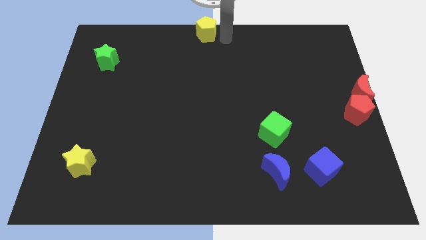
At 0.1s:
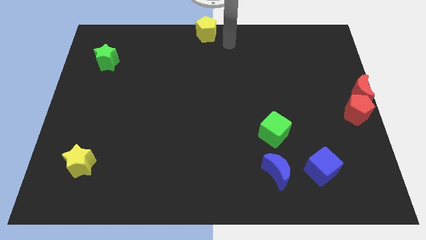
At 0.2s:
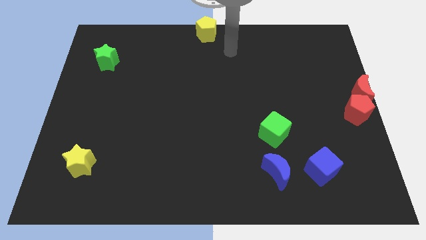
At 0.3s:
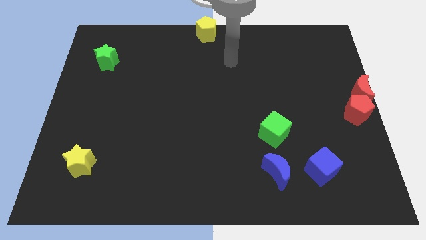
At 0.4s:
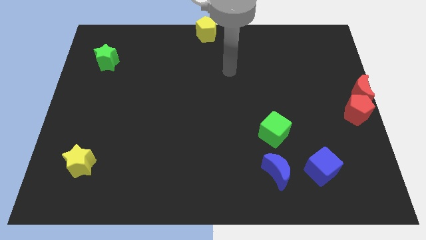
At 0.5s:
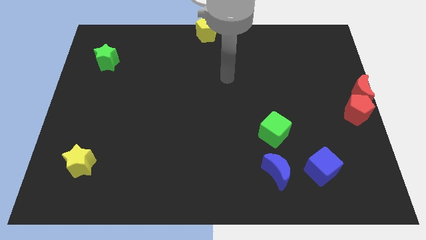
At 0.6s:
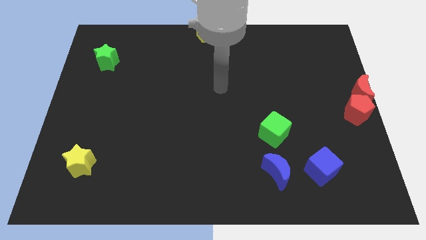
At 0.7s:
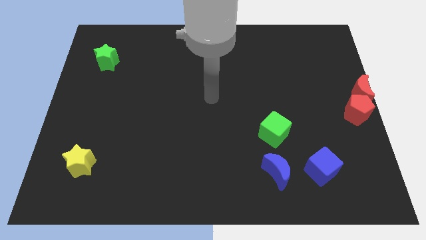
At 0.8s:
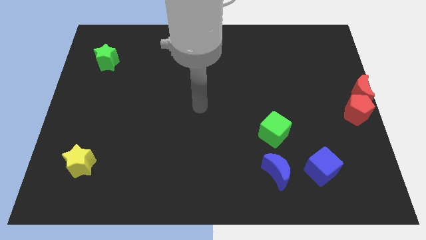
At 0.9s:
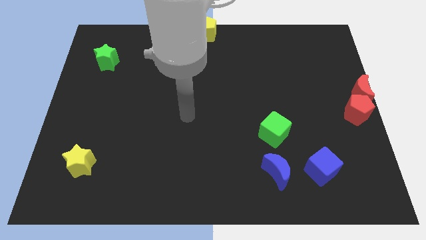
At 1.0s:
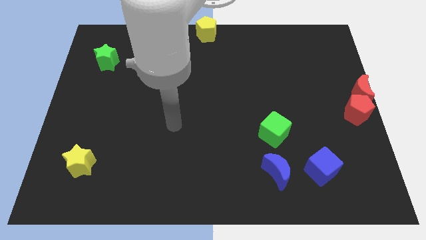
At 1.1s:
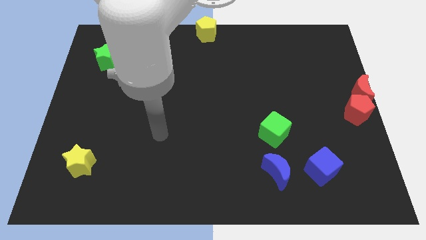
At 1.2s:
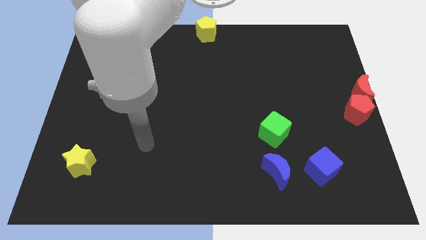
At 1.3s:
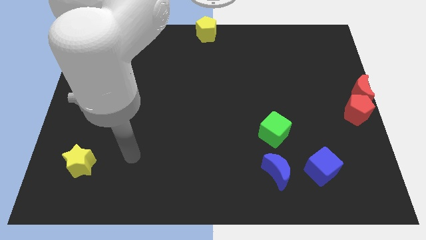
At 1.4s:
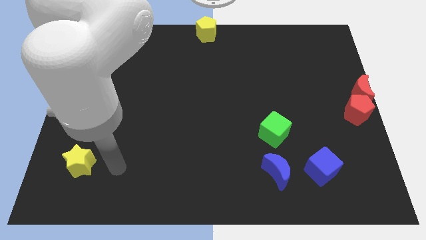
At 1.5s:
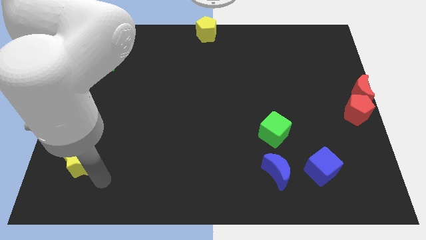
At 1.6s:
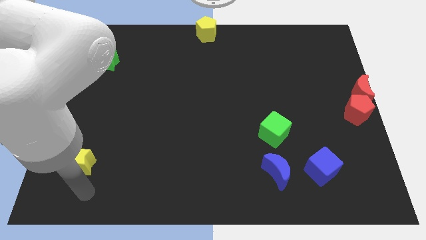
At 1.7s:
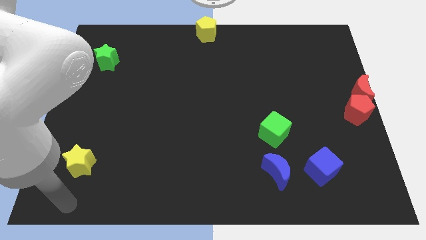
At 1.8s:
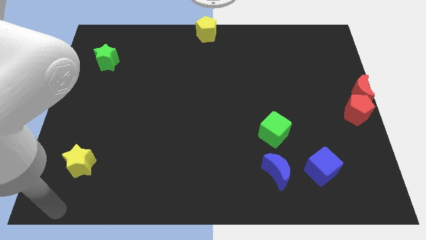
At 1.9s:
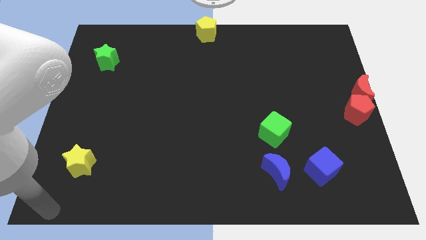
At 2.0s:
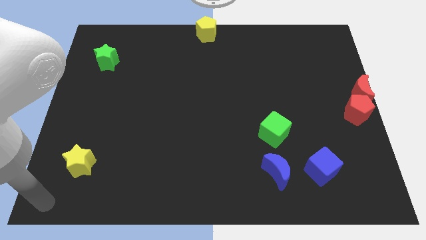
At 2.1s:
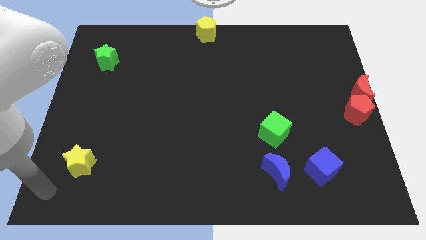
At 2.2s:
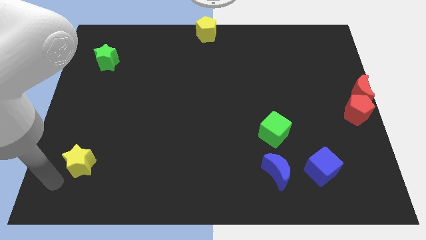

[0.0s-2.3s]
point your hand at the bottom left side of the yellow star

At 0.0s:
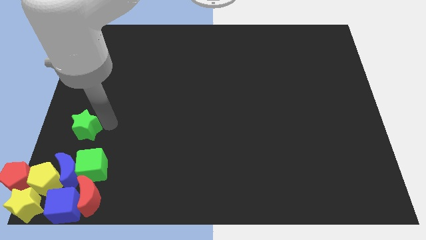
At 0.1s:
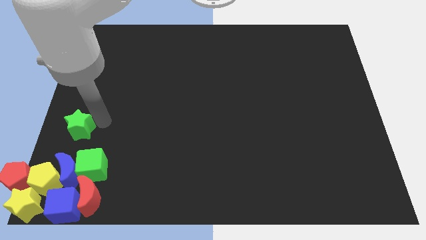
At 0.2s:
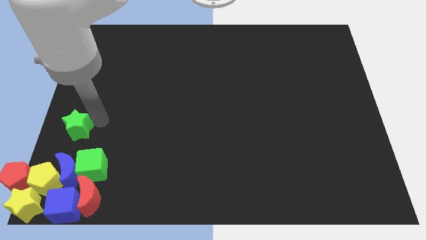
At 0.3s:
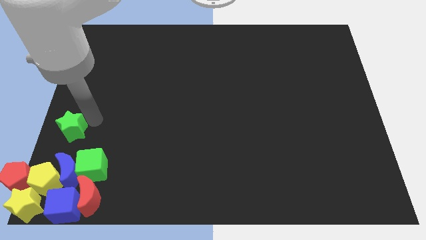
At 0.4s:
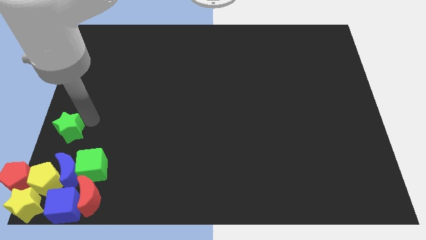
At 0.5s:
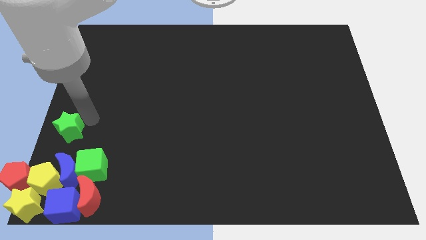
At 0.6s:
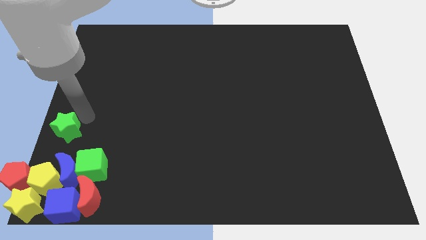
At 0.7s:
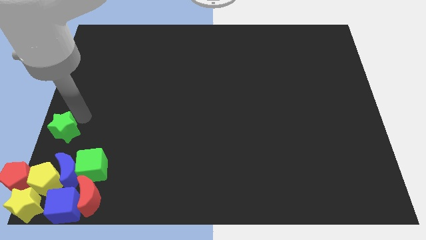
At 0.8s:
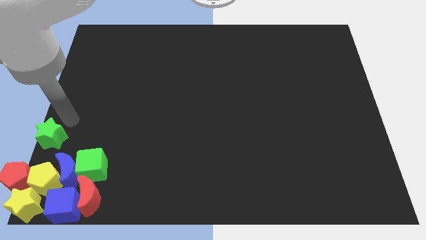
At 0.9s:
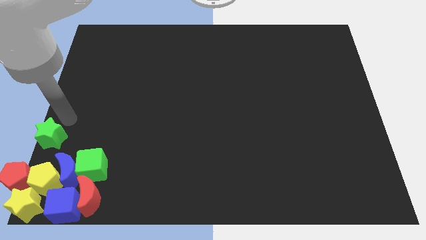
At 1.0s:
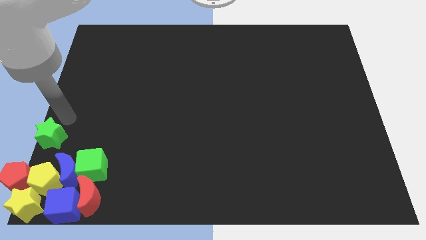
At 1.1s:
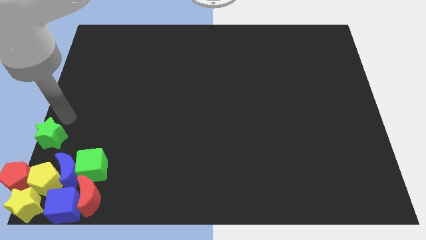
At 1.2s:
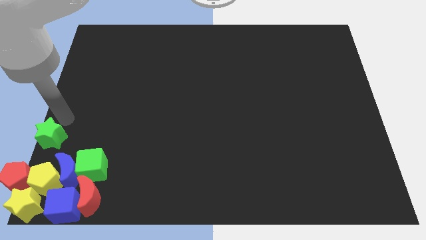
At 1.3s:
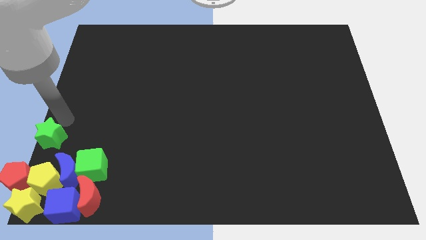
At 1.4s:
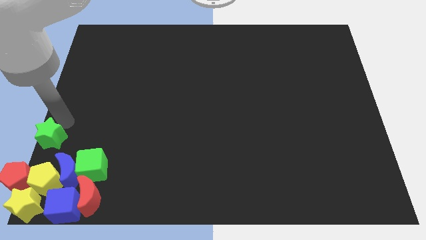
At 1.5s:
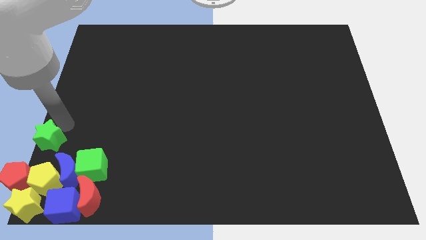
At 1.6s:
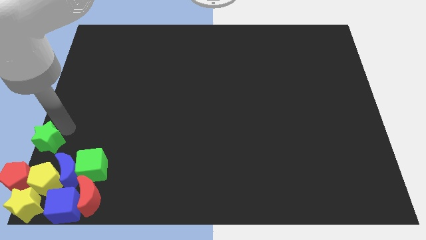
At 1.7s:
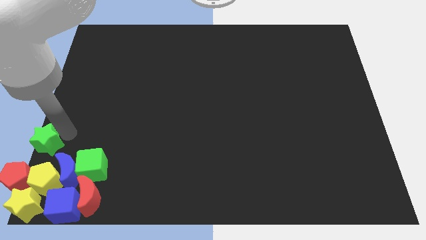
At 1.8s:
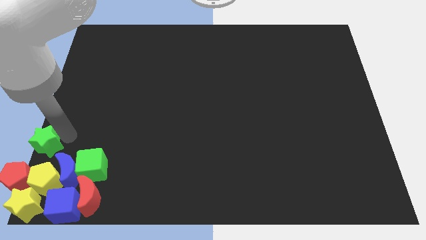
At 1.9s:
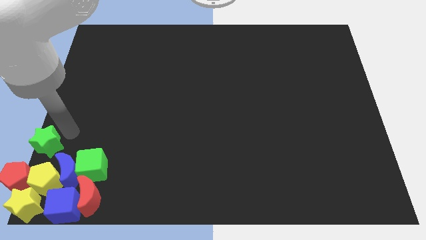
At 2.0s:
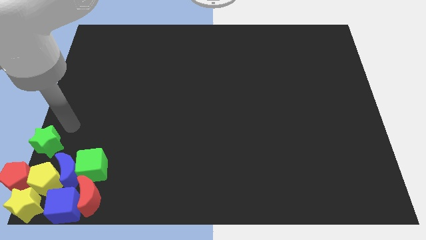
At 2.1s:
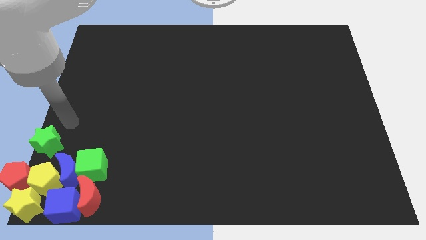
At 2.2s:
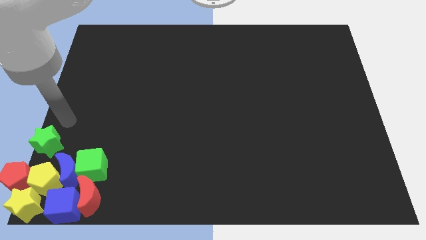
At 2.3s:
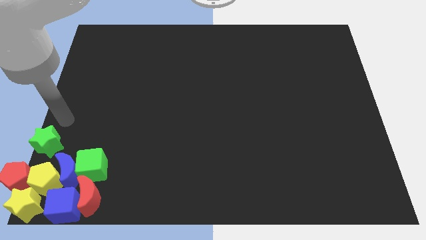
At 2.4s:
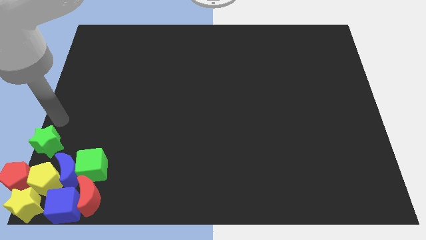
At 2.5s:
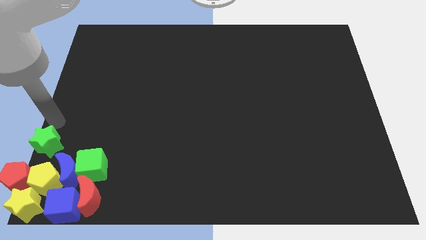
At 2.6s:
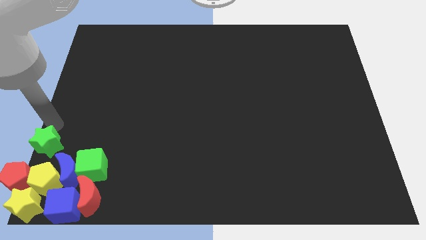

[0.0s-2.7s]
move green star into the group of blocks

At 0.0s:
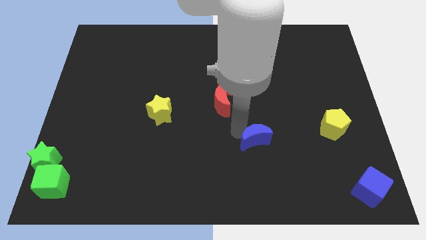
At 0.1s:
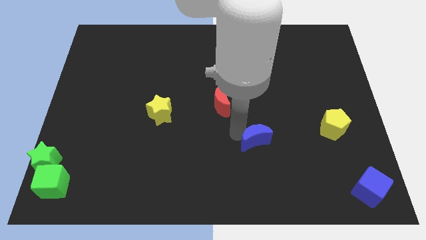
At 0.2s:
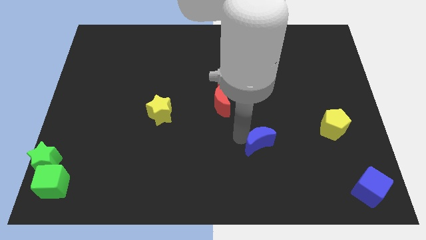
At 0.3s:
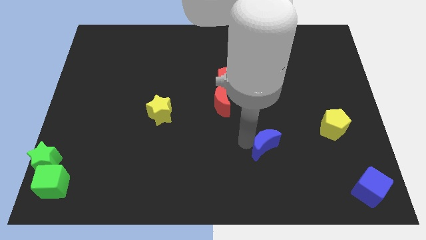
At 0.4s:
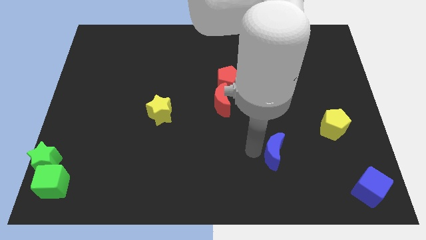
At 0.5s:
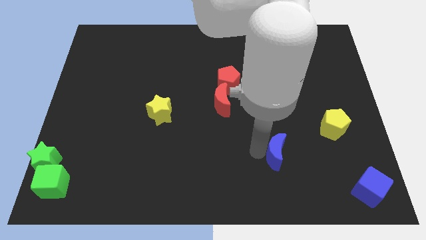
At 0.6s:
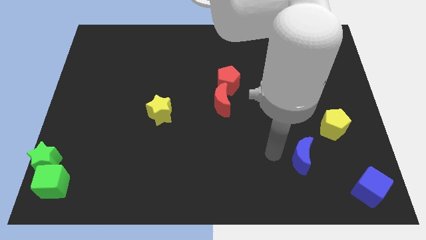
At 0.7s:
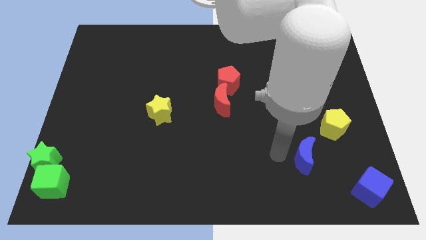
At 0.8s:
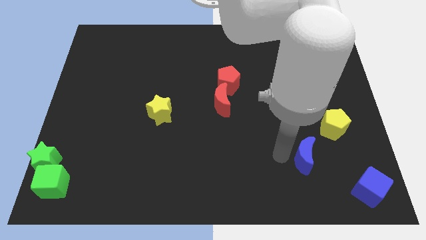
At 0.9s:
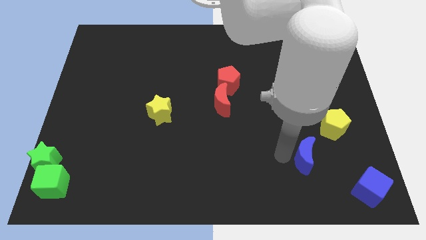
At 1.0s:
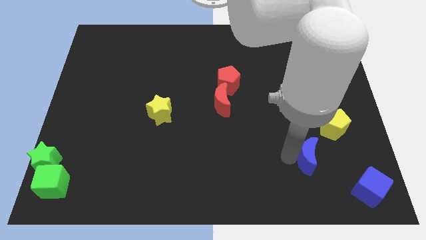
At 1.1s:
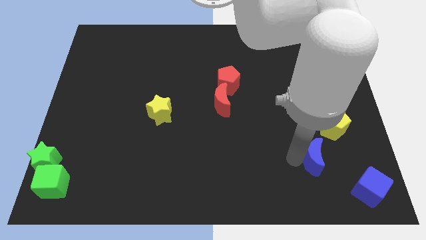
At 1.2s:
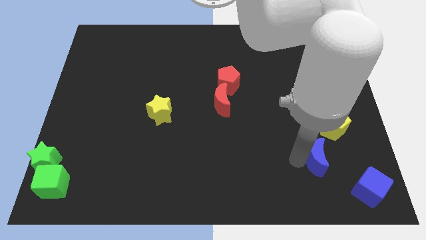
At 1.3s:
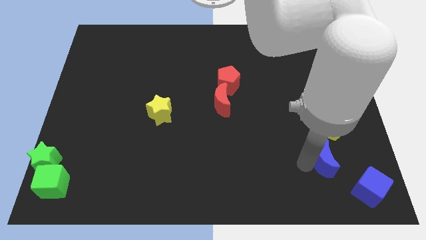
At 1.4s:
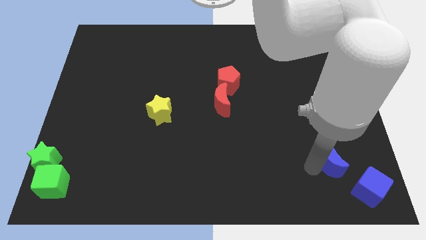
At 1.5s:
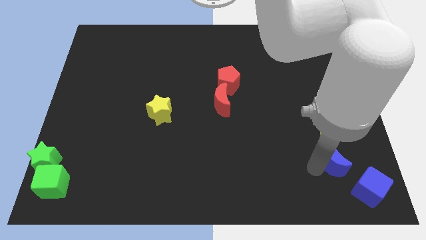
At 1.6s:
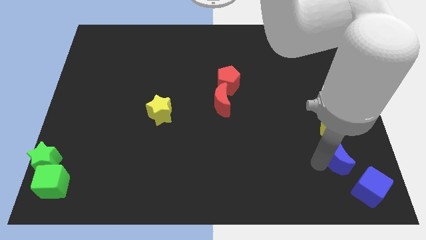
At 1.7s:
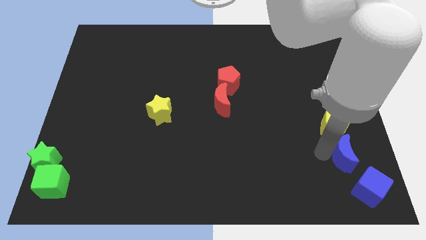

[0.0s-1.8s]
push the blue moon below the yellow pentagon

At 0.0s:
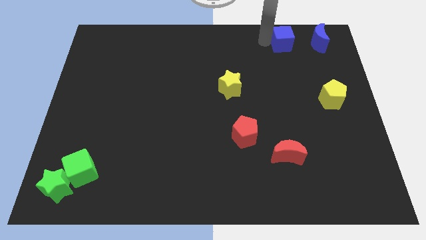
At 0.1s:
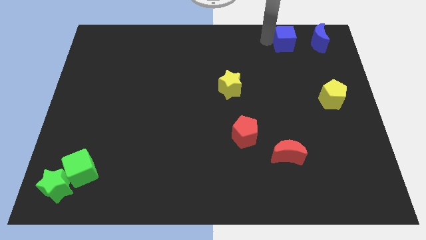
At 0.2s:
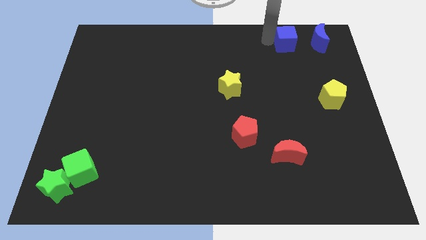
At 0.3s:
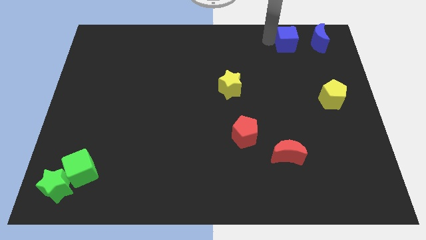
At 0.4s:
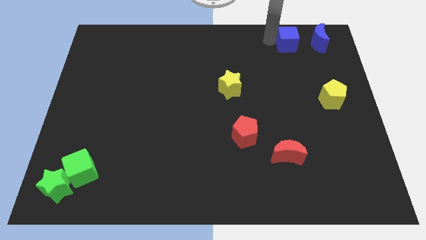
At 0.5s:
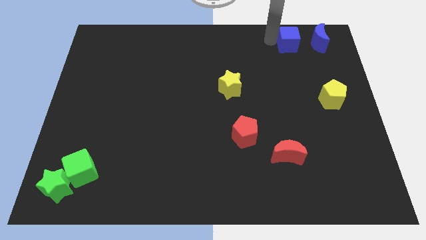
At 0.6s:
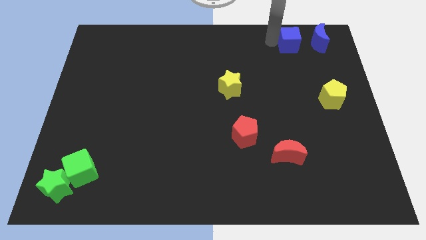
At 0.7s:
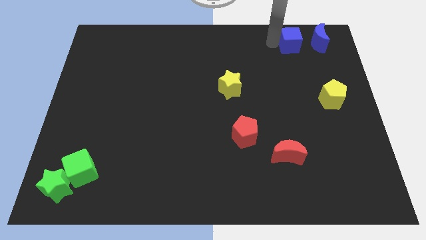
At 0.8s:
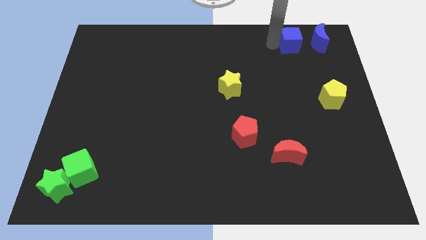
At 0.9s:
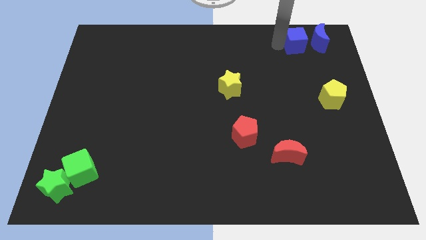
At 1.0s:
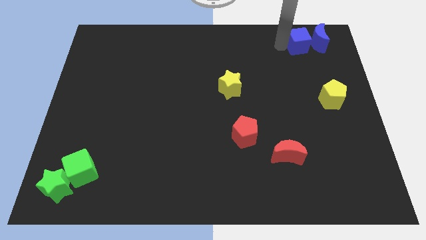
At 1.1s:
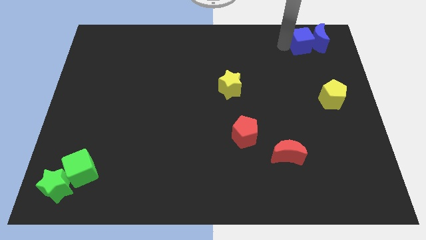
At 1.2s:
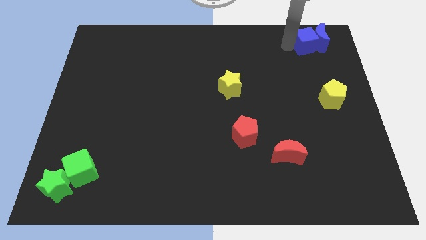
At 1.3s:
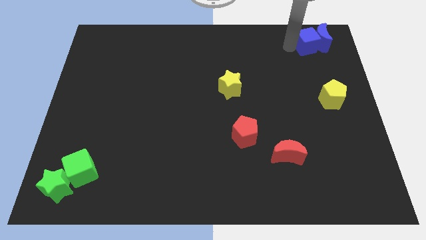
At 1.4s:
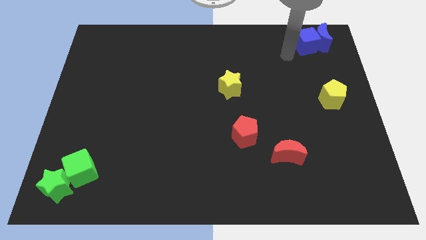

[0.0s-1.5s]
move the blue cube into the left side of the blue crescent

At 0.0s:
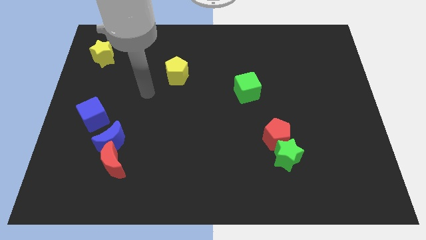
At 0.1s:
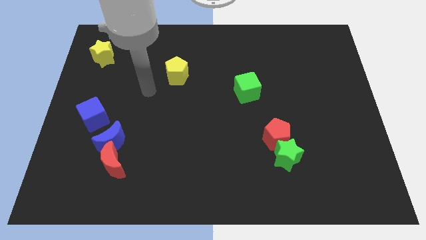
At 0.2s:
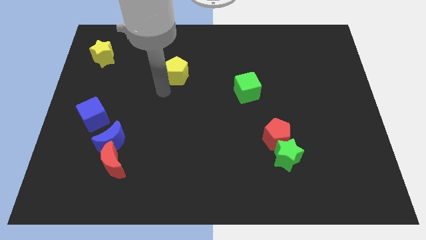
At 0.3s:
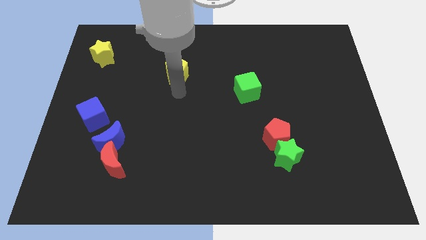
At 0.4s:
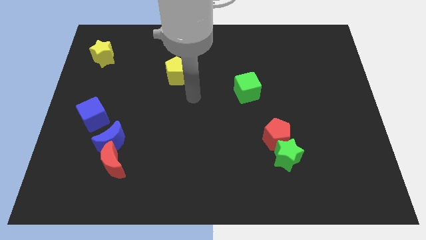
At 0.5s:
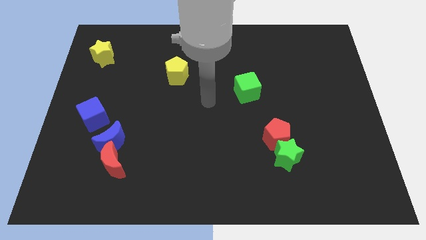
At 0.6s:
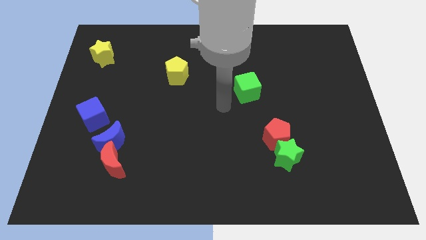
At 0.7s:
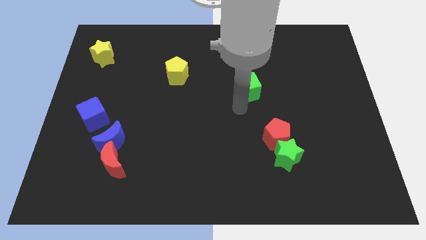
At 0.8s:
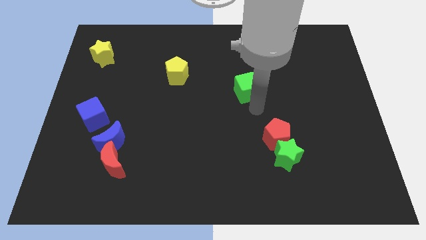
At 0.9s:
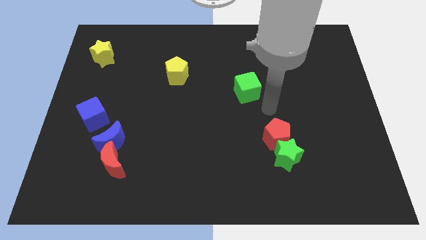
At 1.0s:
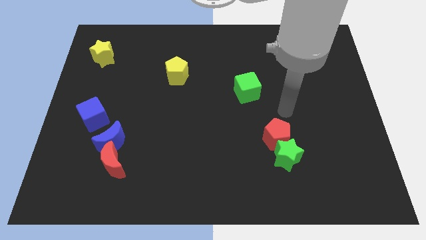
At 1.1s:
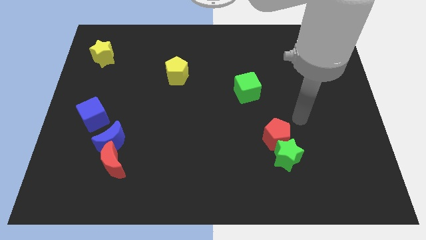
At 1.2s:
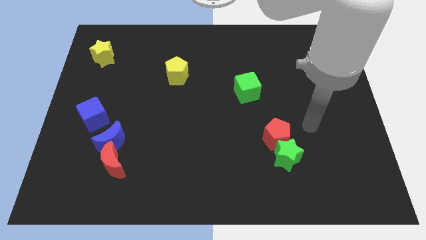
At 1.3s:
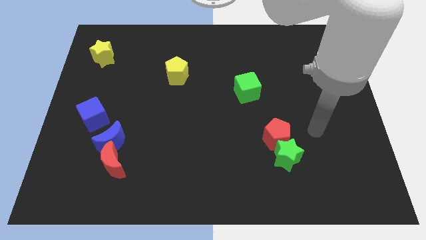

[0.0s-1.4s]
move your hand to the right of the red pentagon
